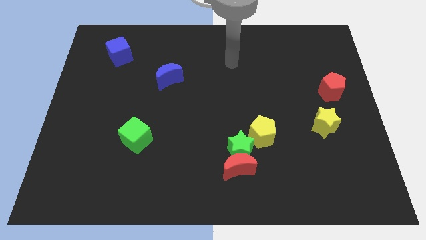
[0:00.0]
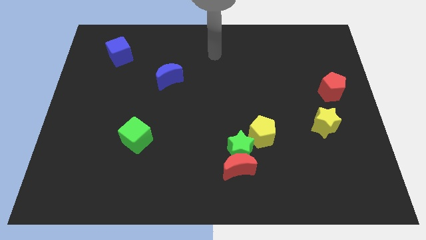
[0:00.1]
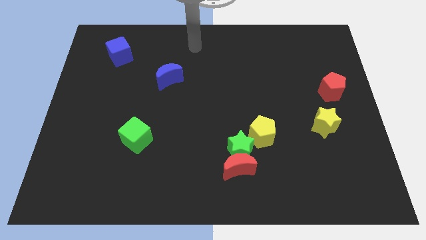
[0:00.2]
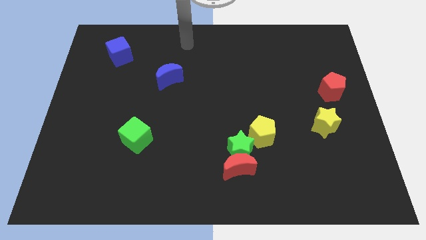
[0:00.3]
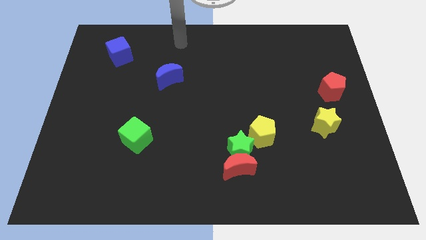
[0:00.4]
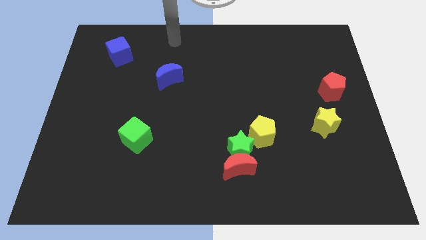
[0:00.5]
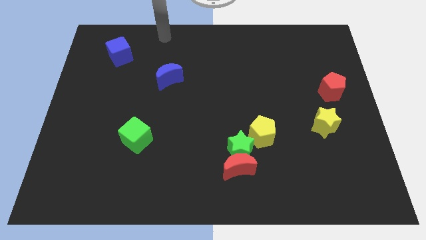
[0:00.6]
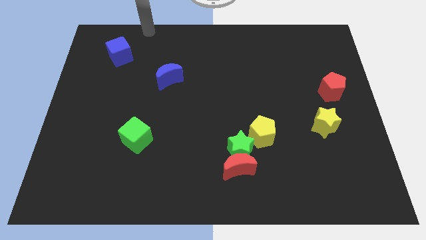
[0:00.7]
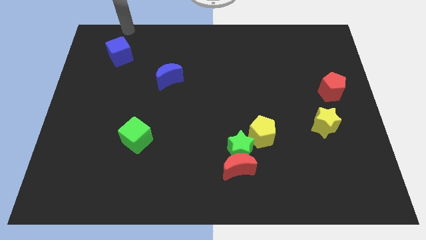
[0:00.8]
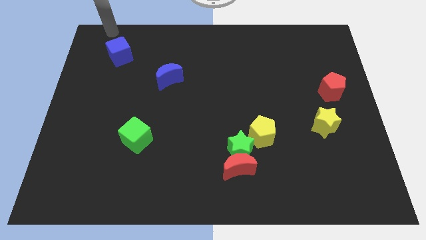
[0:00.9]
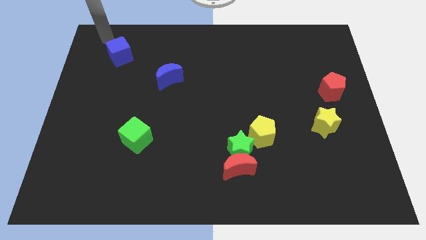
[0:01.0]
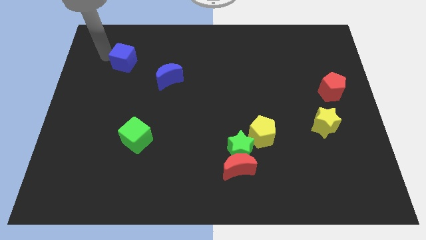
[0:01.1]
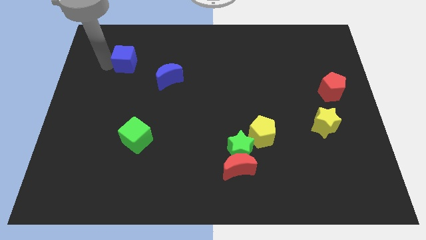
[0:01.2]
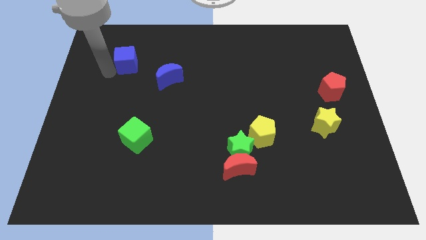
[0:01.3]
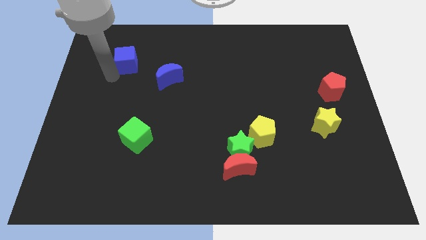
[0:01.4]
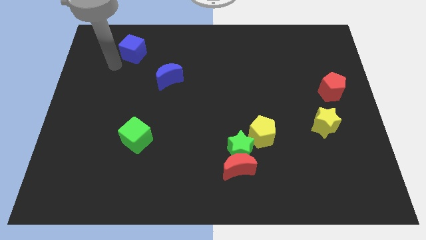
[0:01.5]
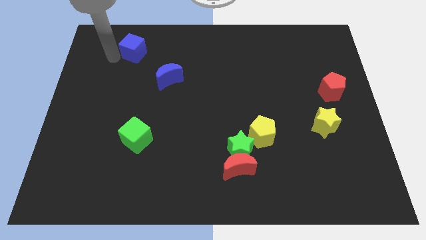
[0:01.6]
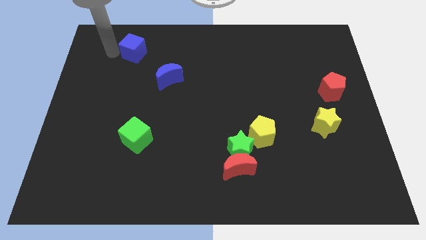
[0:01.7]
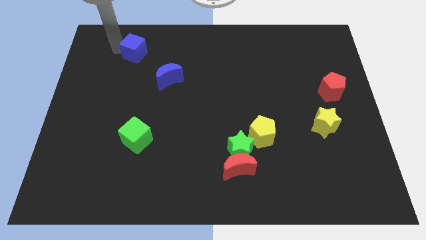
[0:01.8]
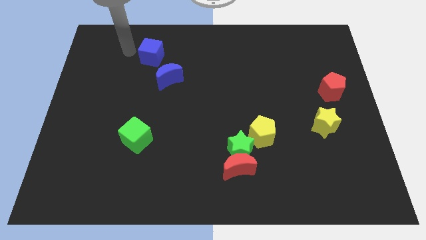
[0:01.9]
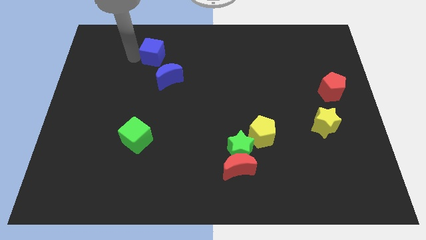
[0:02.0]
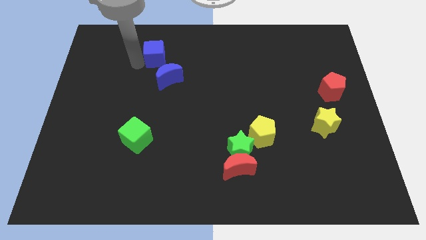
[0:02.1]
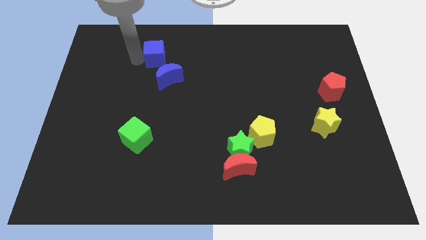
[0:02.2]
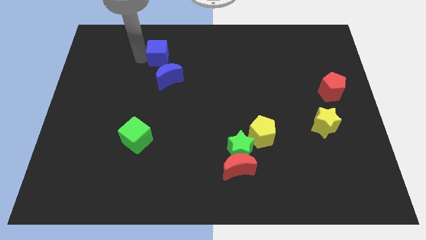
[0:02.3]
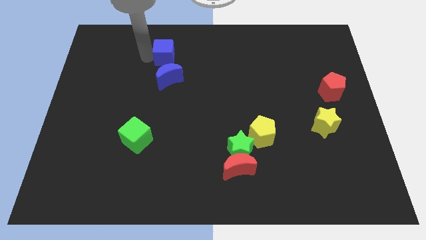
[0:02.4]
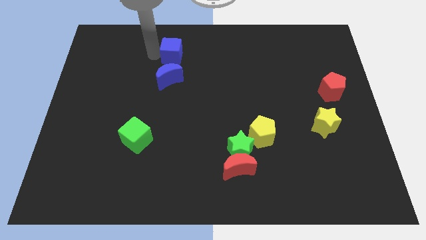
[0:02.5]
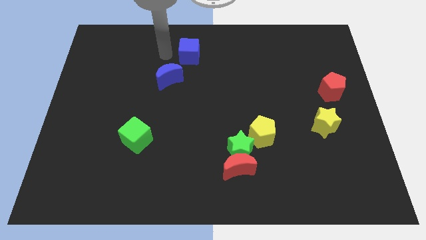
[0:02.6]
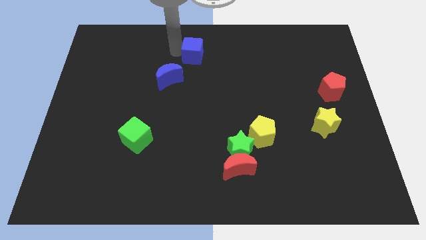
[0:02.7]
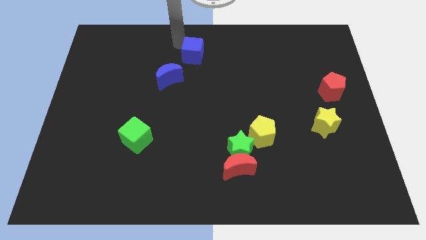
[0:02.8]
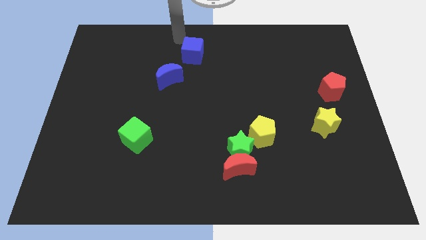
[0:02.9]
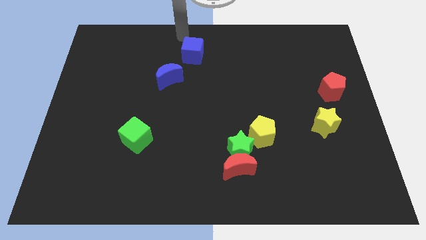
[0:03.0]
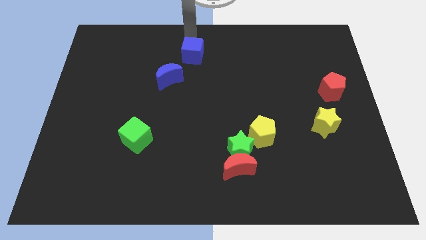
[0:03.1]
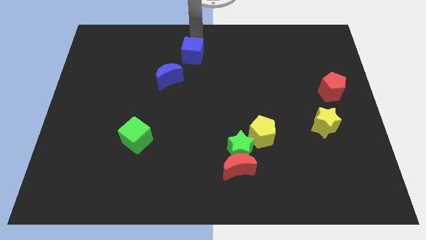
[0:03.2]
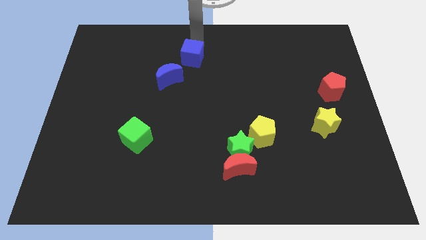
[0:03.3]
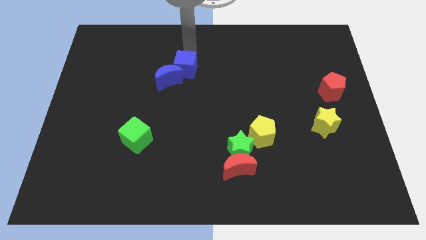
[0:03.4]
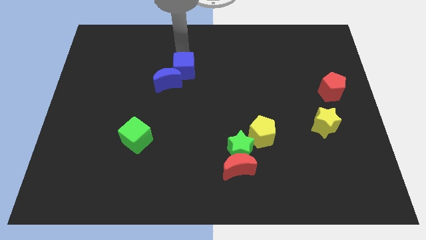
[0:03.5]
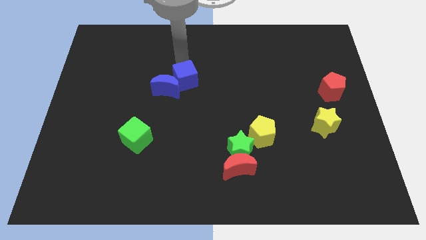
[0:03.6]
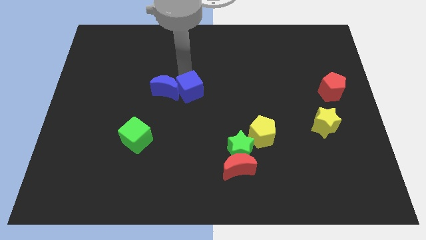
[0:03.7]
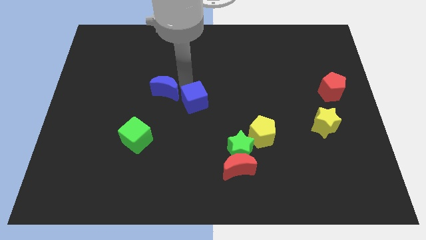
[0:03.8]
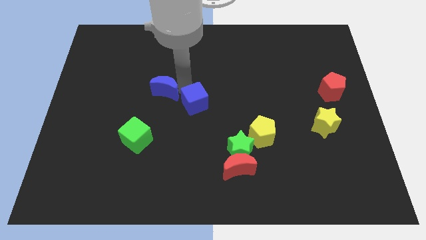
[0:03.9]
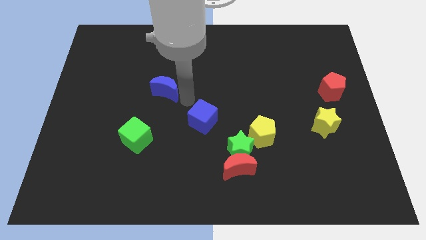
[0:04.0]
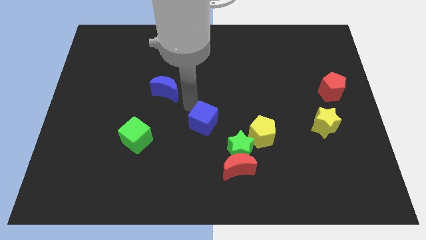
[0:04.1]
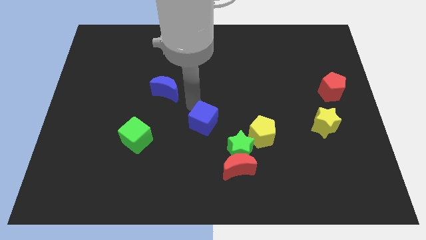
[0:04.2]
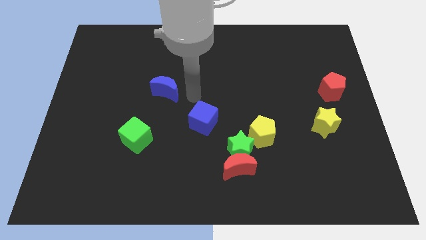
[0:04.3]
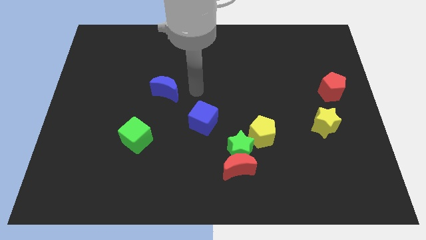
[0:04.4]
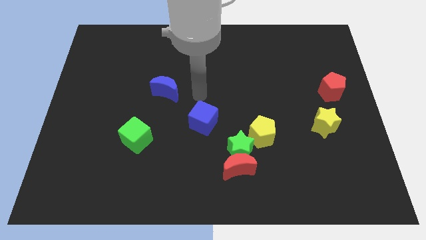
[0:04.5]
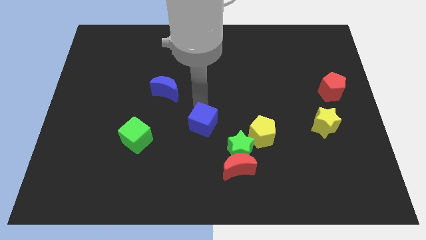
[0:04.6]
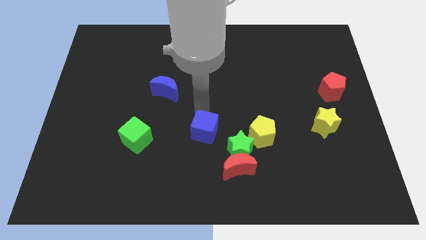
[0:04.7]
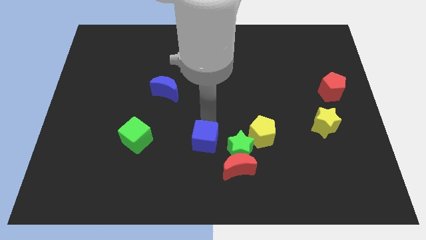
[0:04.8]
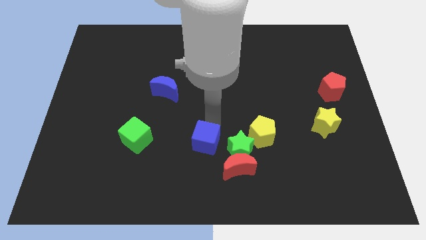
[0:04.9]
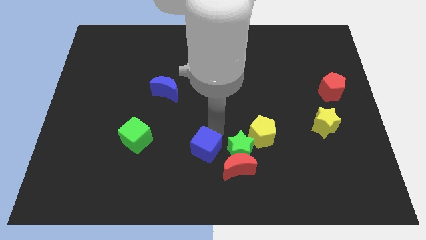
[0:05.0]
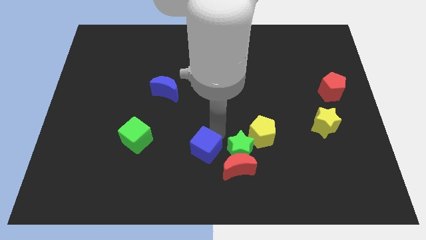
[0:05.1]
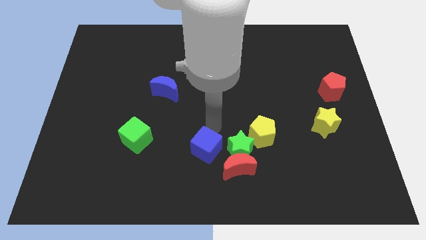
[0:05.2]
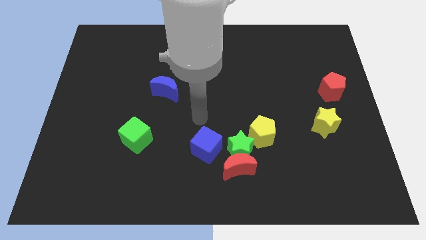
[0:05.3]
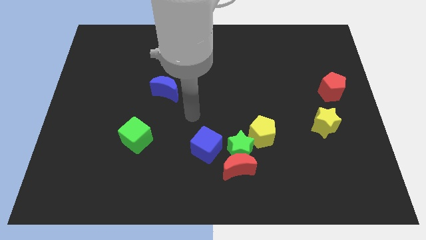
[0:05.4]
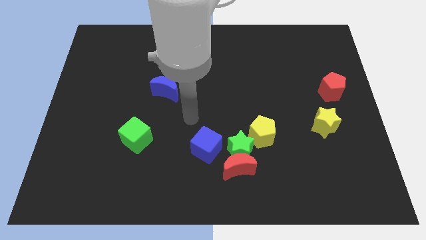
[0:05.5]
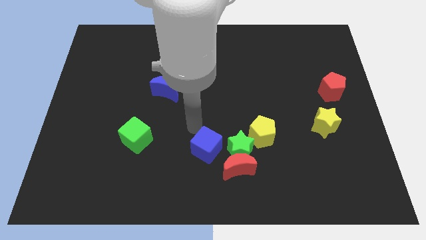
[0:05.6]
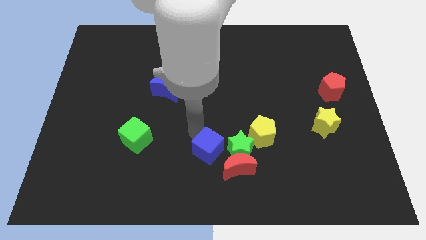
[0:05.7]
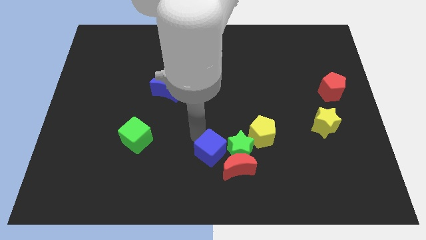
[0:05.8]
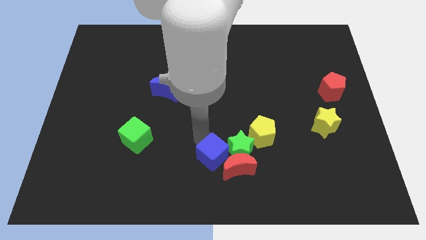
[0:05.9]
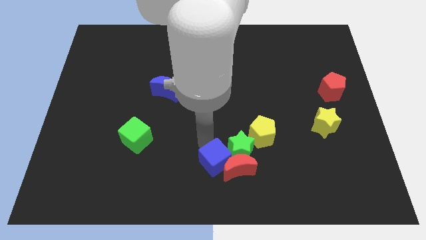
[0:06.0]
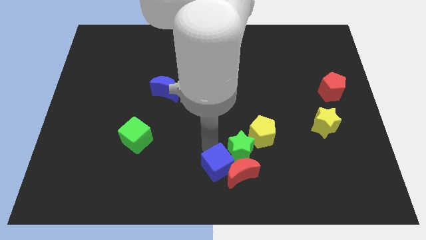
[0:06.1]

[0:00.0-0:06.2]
move the blue cube next to the red moon

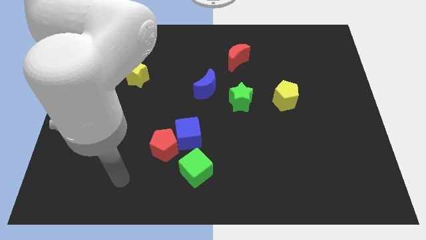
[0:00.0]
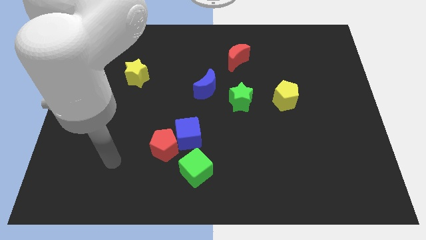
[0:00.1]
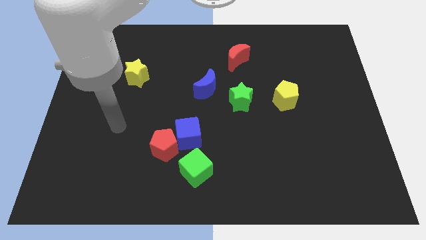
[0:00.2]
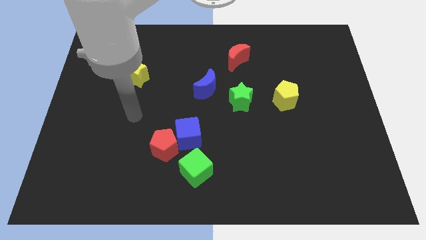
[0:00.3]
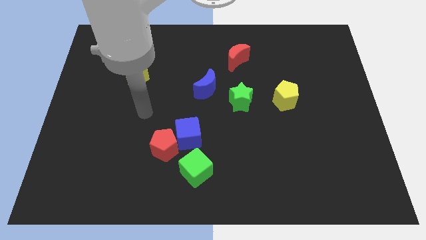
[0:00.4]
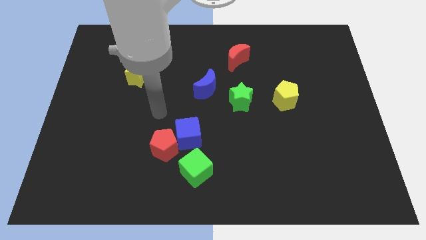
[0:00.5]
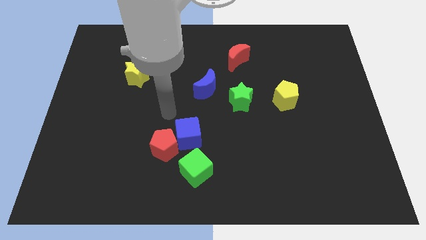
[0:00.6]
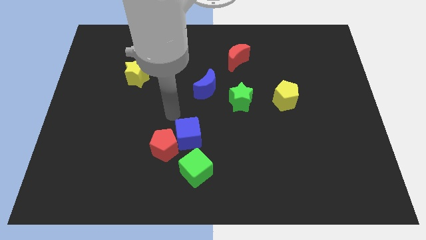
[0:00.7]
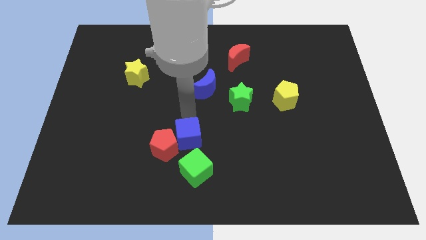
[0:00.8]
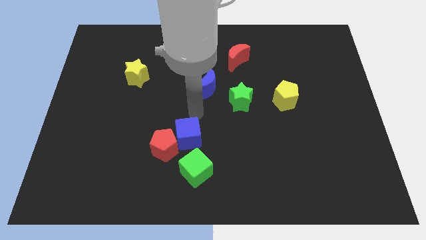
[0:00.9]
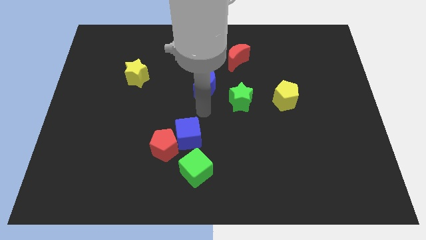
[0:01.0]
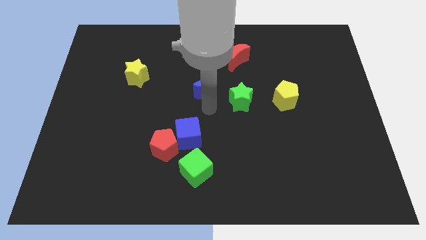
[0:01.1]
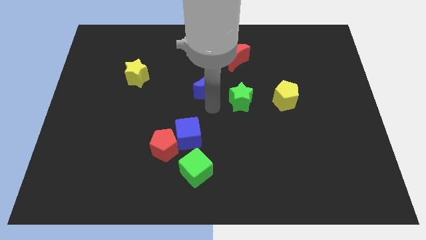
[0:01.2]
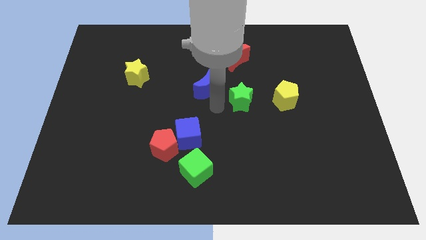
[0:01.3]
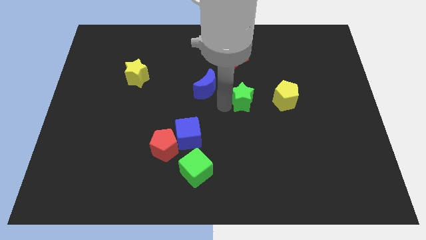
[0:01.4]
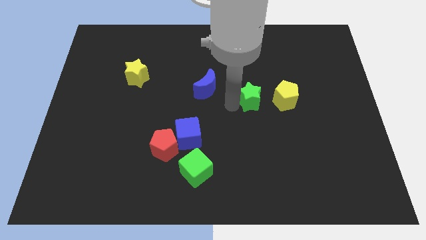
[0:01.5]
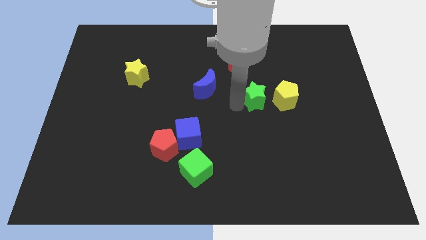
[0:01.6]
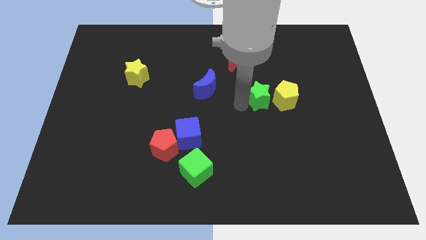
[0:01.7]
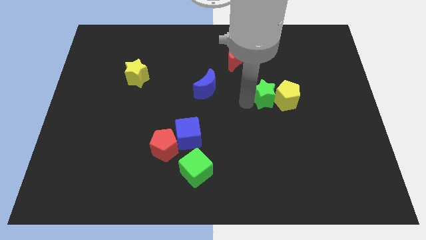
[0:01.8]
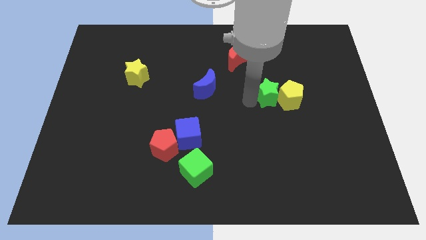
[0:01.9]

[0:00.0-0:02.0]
move the green star next to the yellow pentagon

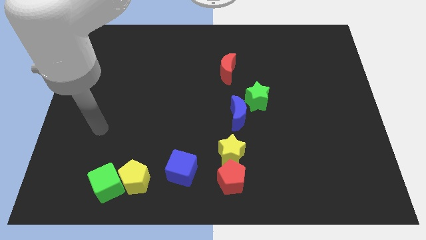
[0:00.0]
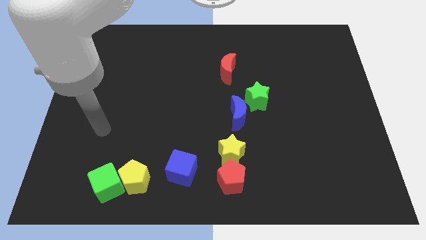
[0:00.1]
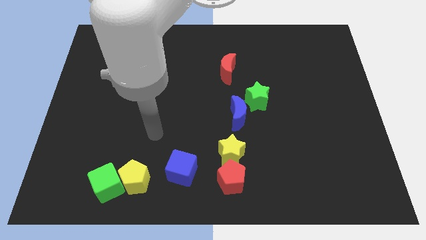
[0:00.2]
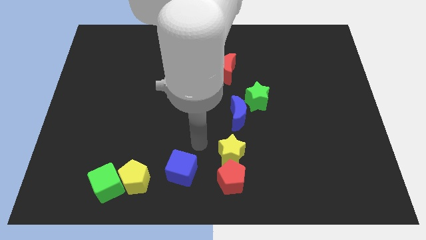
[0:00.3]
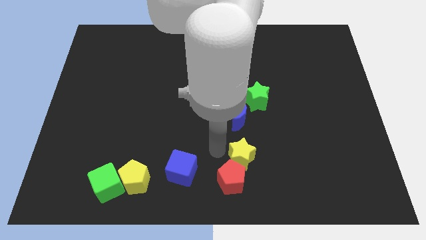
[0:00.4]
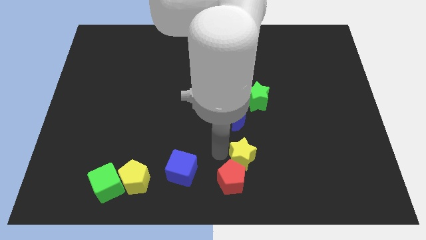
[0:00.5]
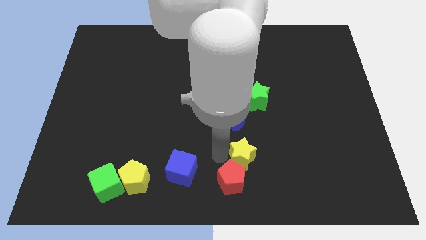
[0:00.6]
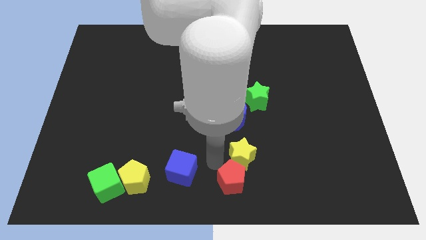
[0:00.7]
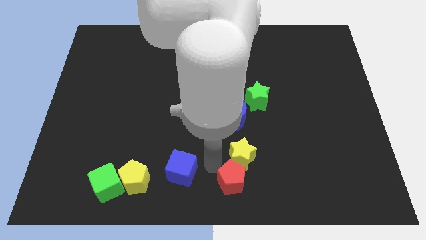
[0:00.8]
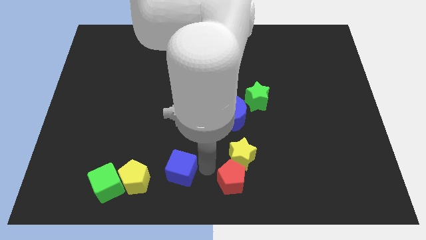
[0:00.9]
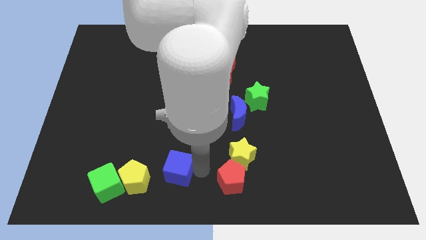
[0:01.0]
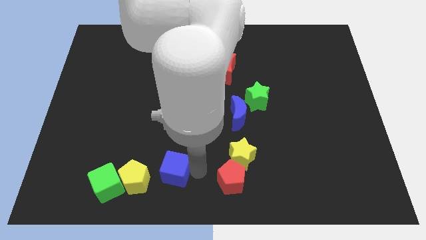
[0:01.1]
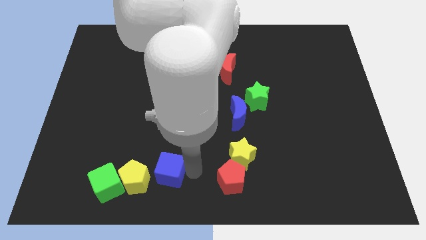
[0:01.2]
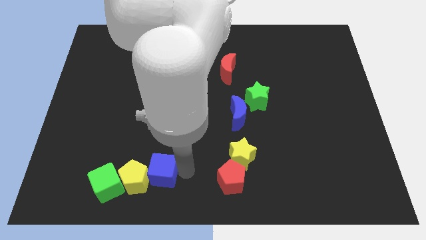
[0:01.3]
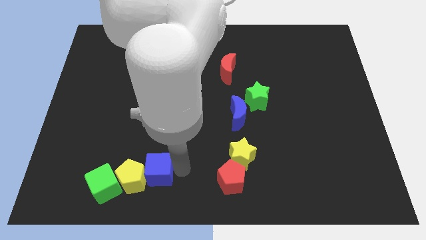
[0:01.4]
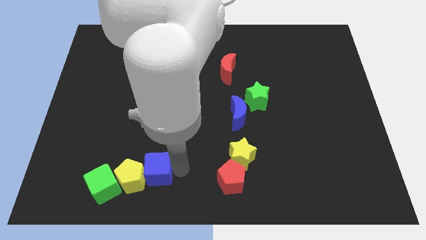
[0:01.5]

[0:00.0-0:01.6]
move the blue cube to the yellow pentagon
